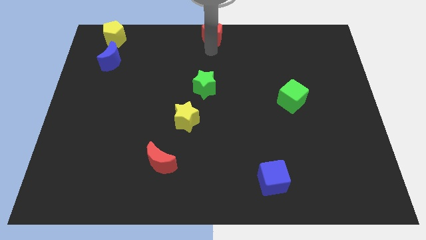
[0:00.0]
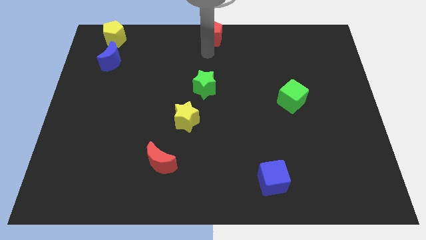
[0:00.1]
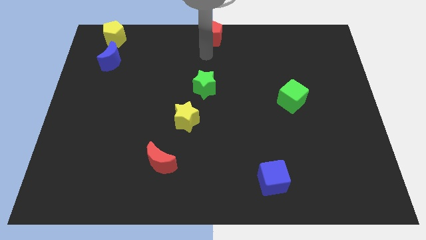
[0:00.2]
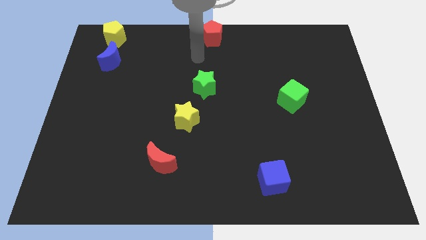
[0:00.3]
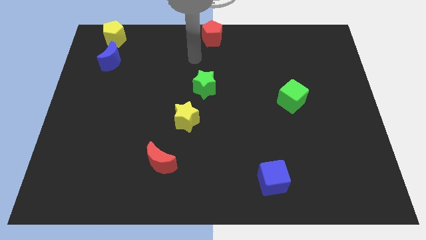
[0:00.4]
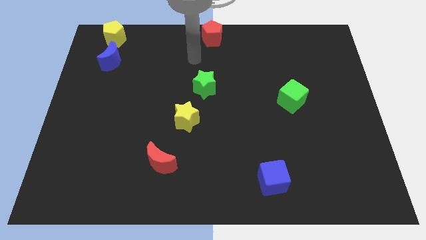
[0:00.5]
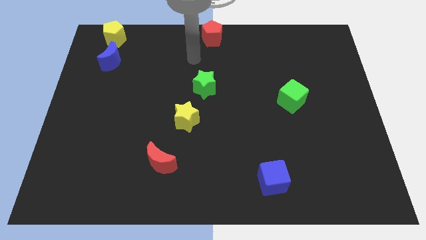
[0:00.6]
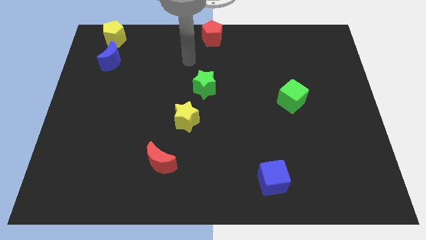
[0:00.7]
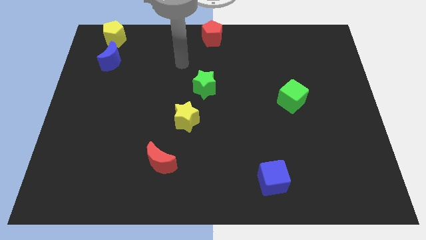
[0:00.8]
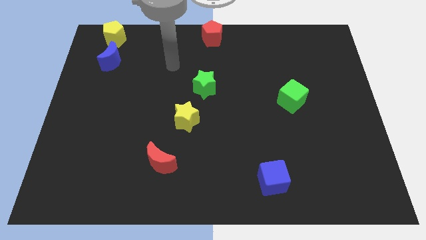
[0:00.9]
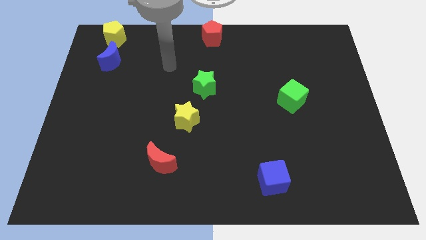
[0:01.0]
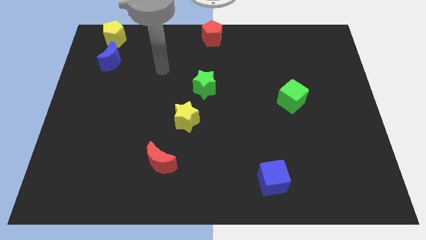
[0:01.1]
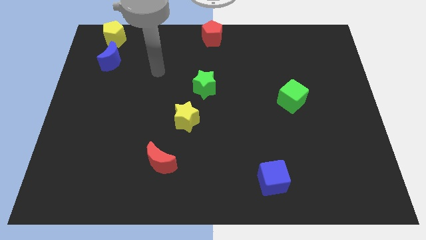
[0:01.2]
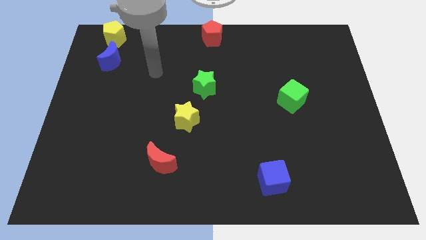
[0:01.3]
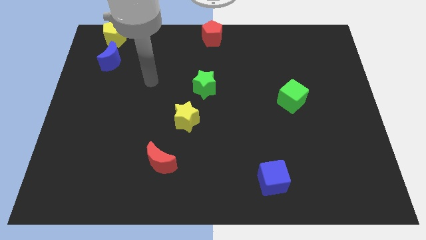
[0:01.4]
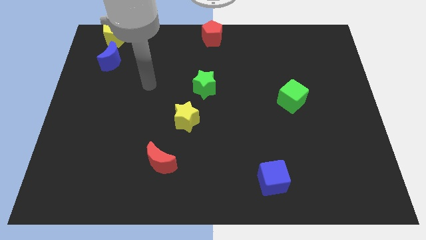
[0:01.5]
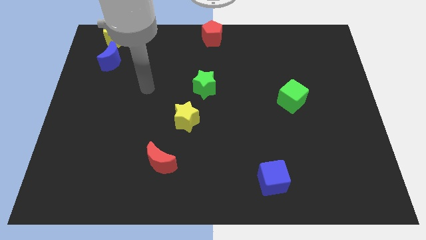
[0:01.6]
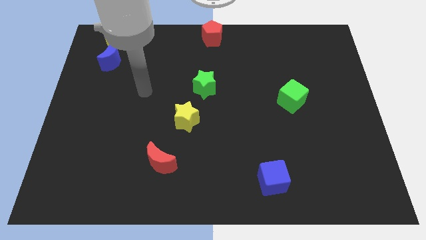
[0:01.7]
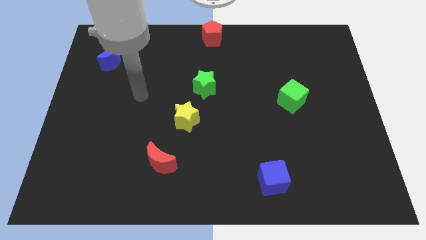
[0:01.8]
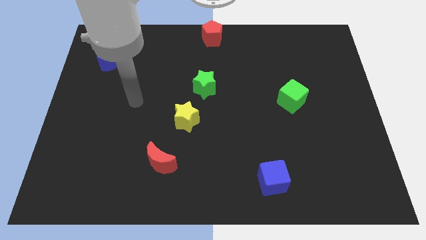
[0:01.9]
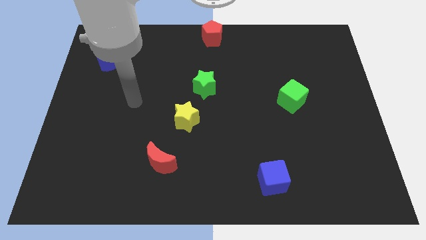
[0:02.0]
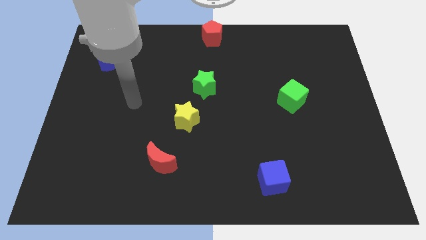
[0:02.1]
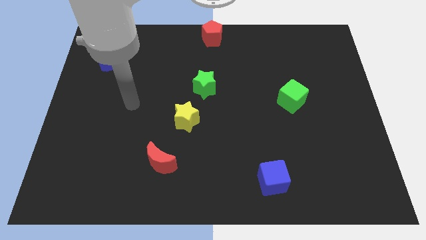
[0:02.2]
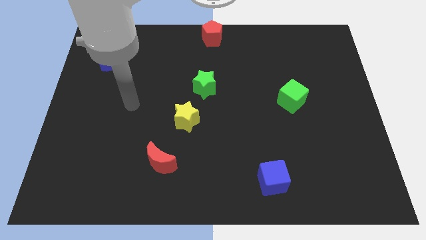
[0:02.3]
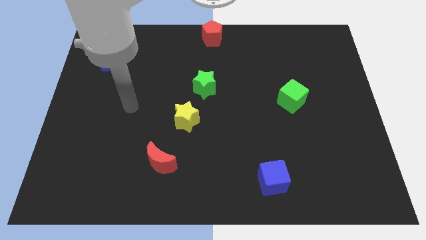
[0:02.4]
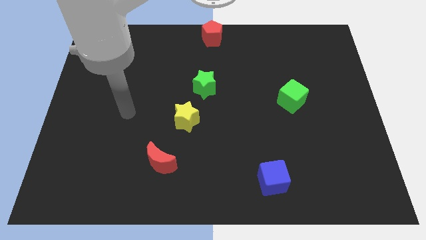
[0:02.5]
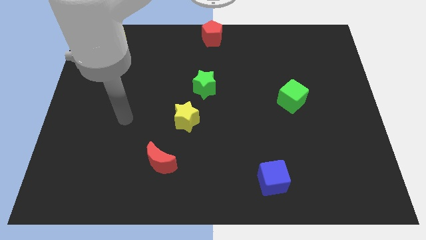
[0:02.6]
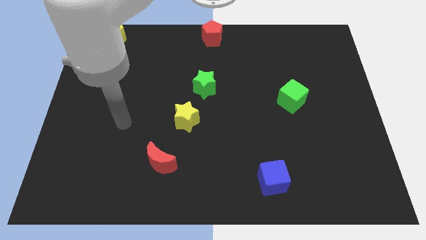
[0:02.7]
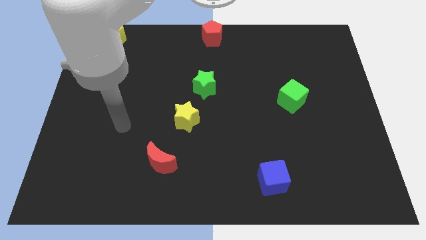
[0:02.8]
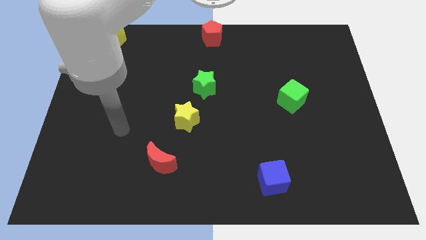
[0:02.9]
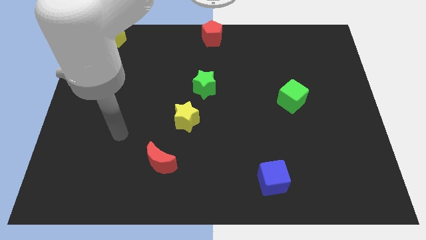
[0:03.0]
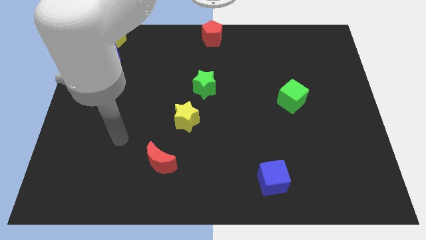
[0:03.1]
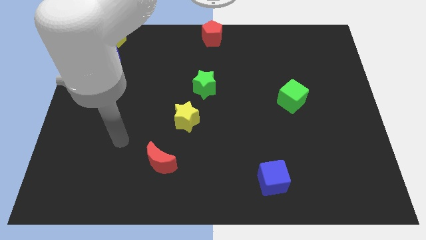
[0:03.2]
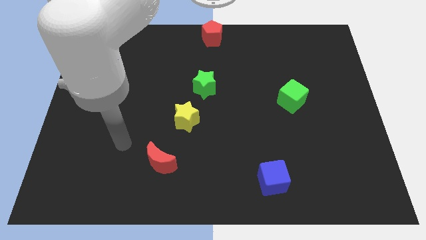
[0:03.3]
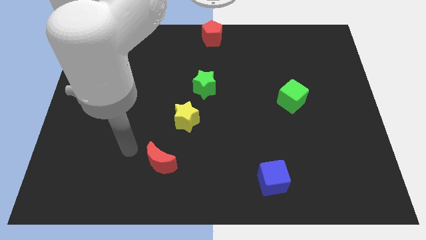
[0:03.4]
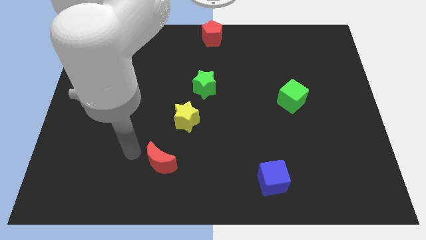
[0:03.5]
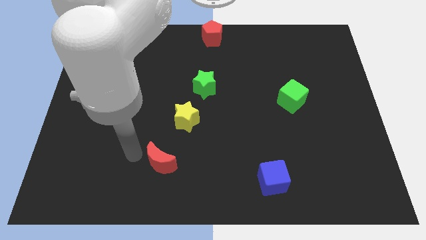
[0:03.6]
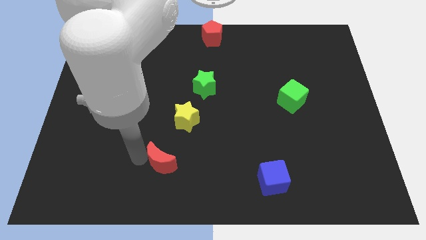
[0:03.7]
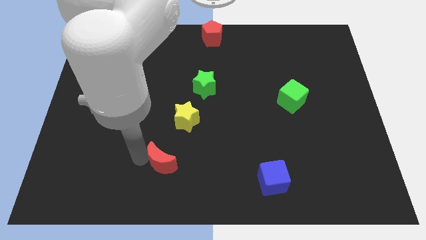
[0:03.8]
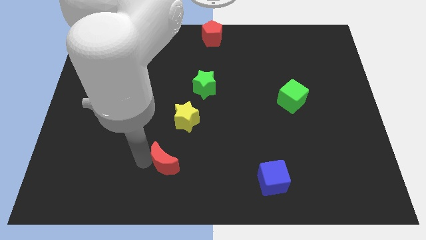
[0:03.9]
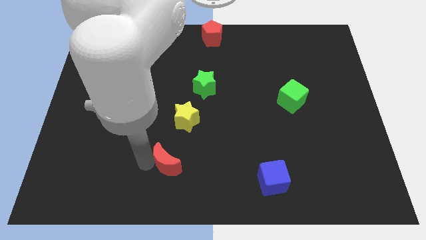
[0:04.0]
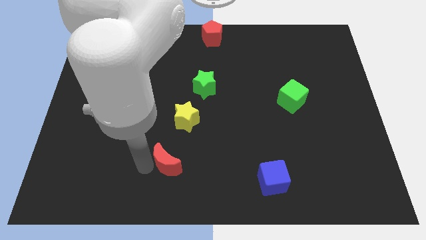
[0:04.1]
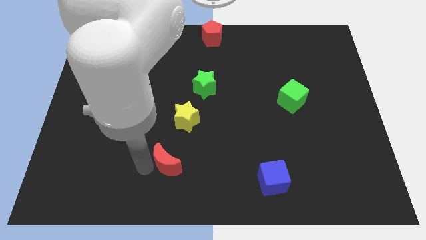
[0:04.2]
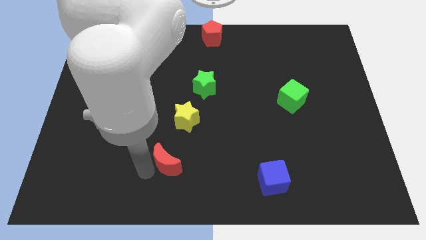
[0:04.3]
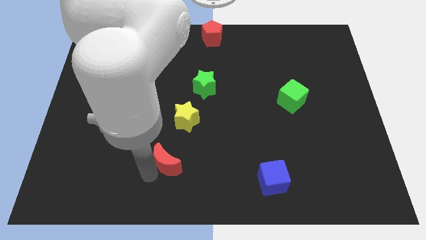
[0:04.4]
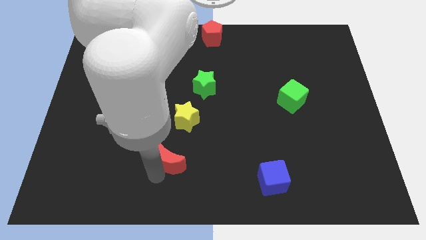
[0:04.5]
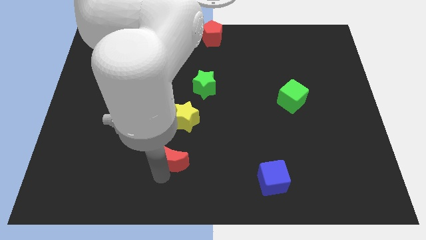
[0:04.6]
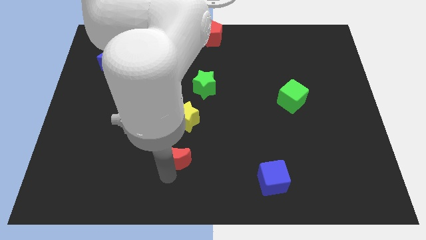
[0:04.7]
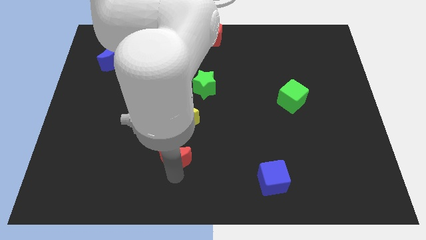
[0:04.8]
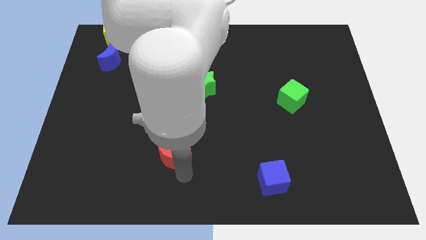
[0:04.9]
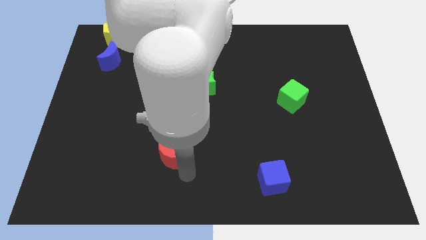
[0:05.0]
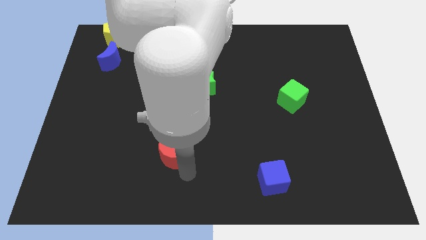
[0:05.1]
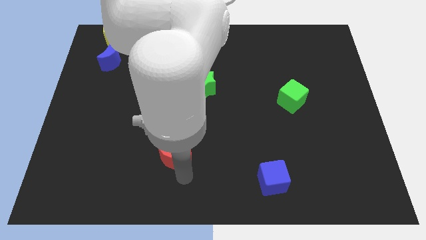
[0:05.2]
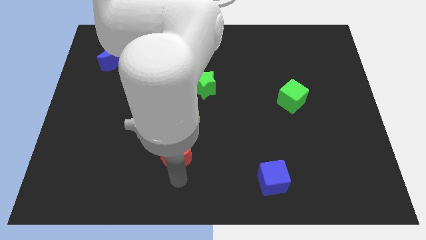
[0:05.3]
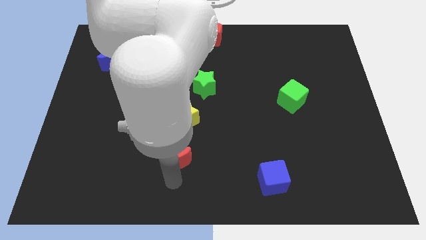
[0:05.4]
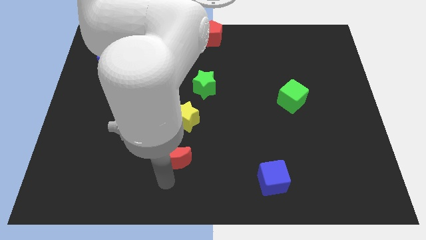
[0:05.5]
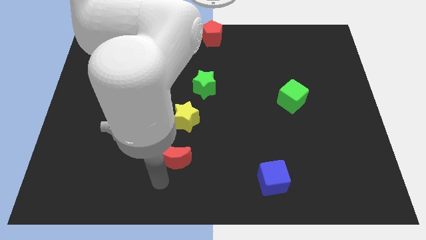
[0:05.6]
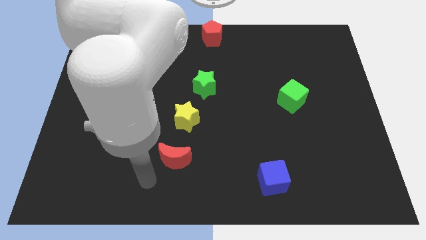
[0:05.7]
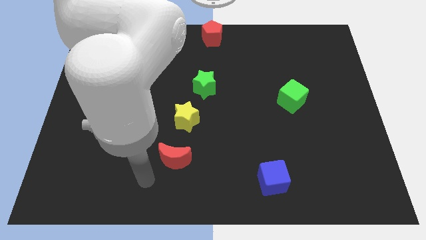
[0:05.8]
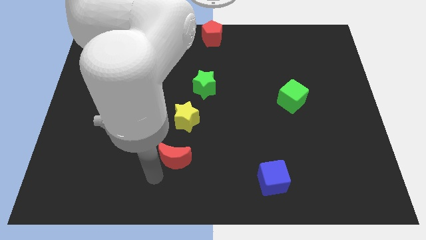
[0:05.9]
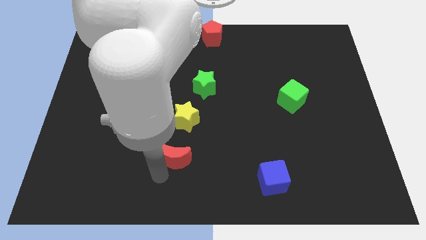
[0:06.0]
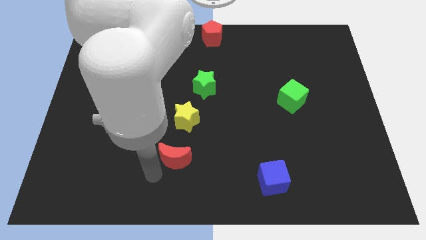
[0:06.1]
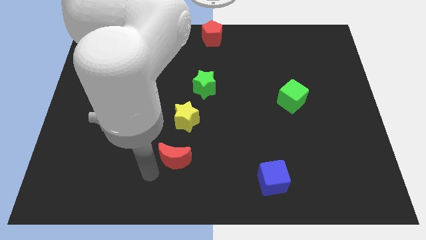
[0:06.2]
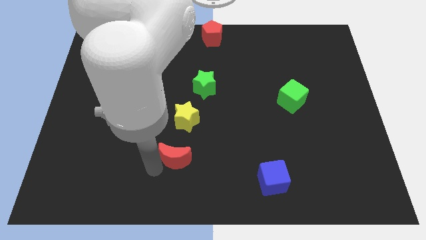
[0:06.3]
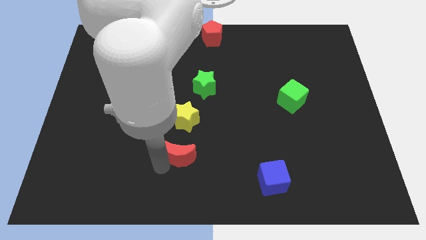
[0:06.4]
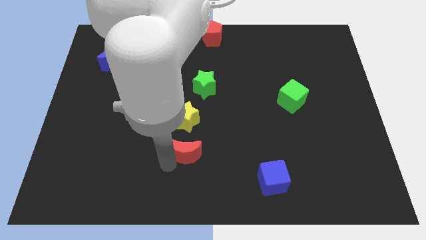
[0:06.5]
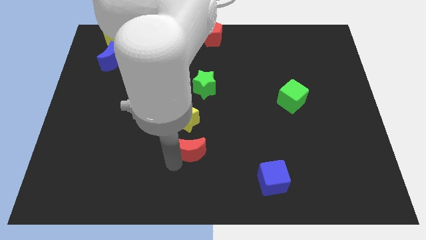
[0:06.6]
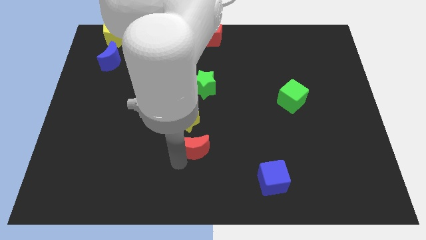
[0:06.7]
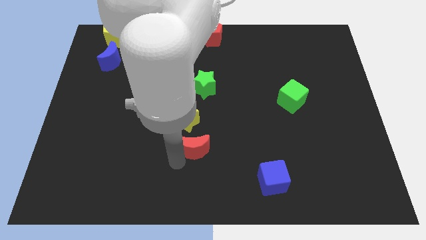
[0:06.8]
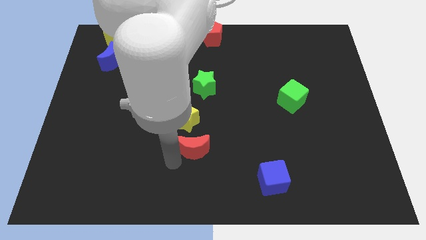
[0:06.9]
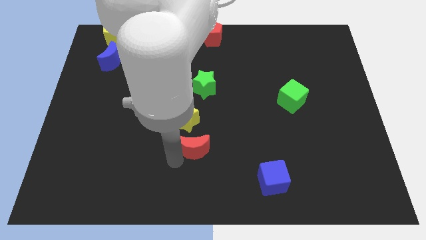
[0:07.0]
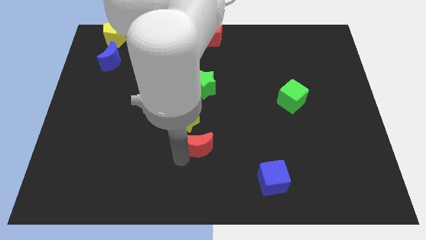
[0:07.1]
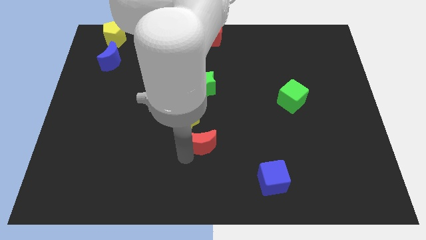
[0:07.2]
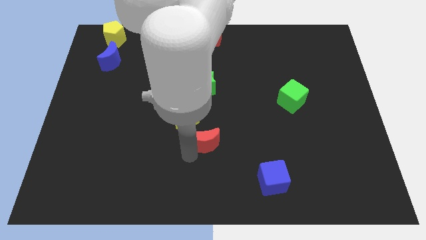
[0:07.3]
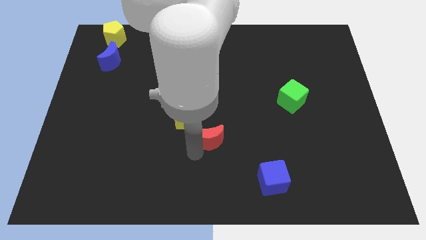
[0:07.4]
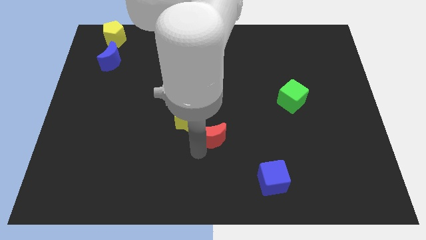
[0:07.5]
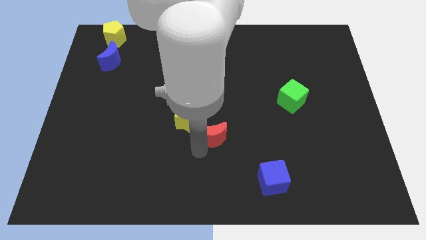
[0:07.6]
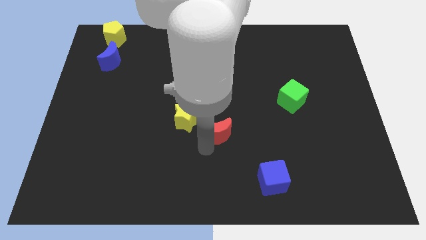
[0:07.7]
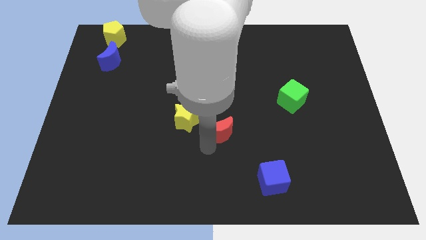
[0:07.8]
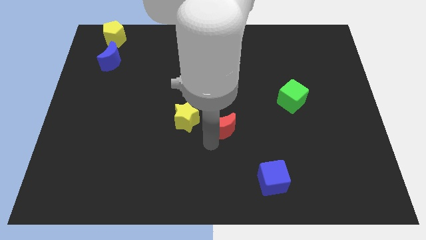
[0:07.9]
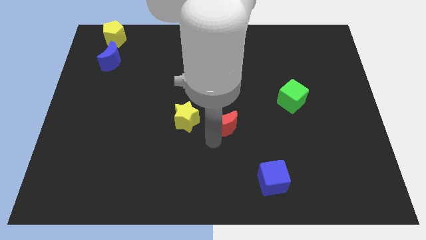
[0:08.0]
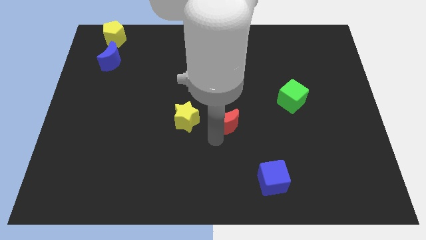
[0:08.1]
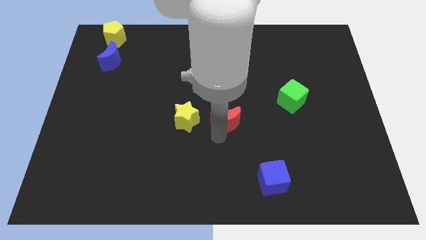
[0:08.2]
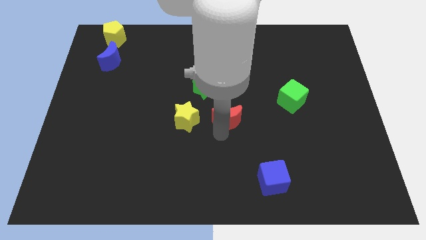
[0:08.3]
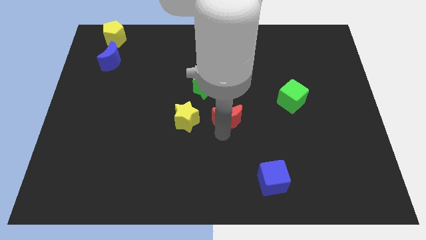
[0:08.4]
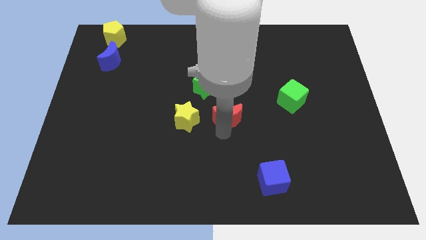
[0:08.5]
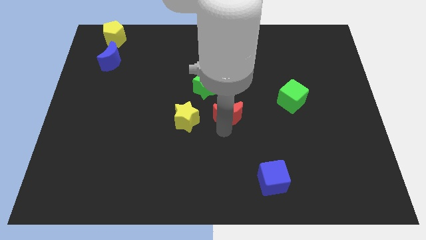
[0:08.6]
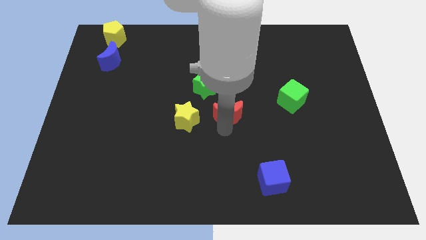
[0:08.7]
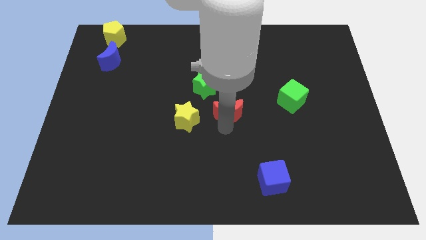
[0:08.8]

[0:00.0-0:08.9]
move the red crescent to the center of the board
